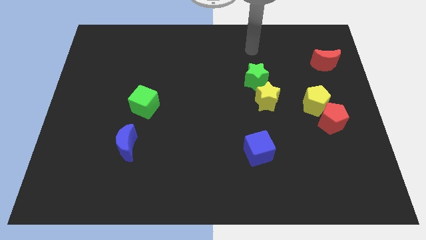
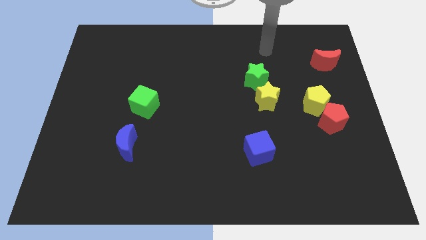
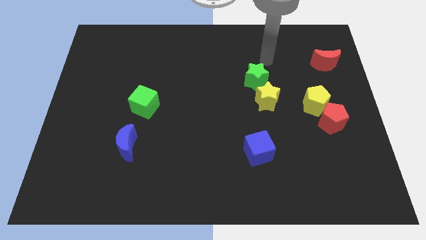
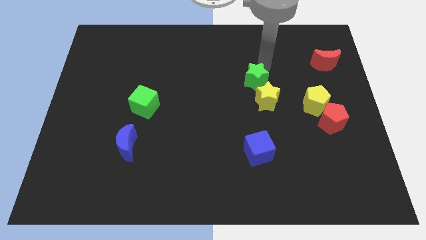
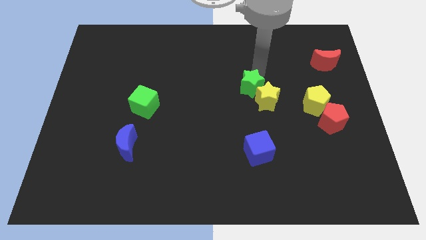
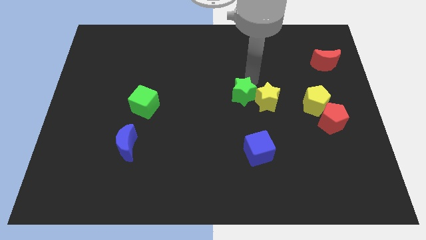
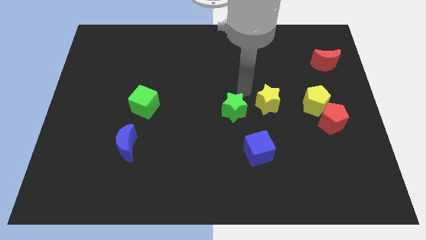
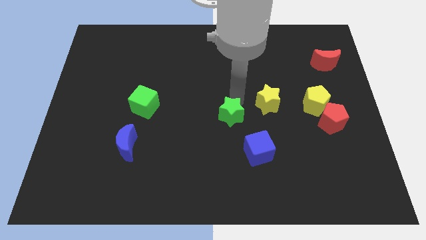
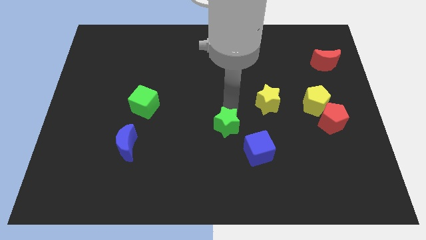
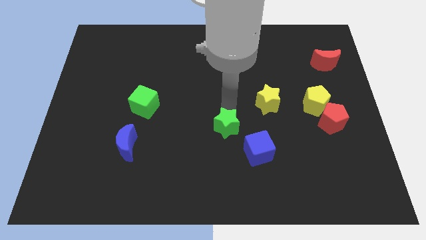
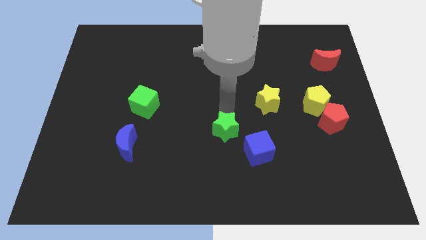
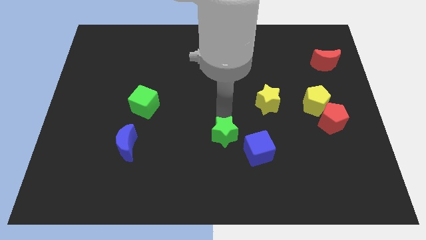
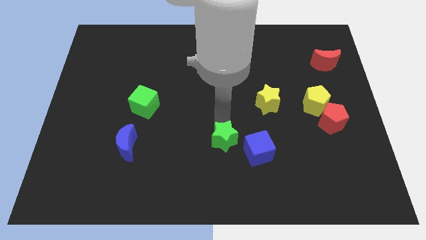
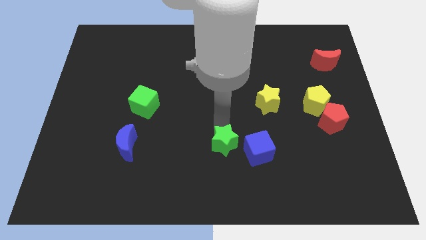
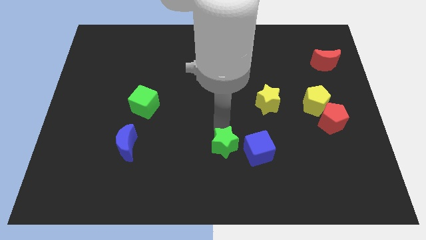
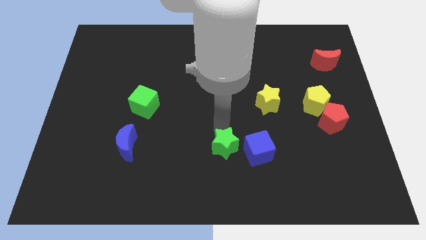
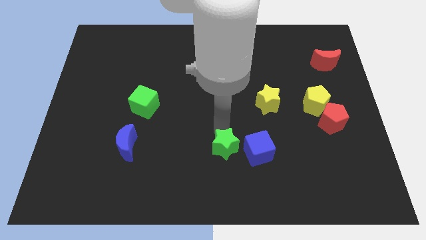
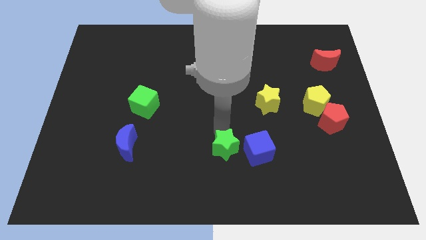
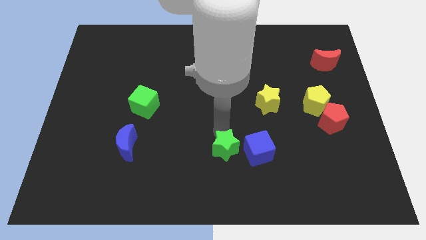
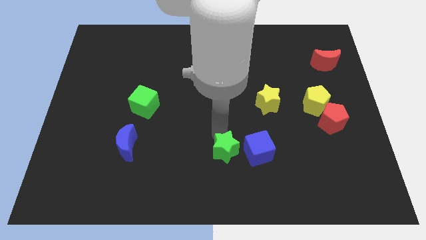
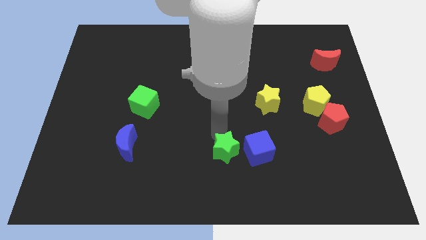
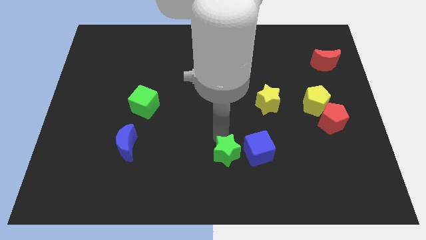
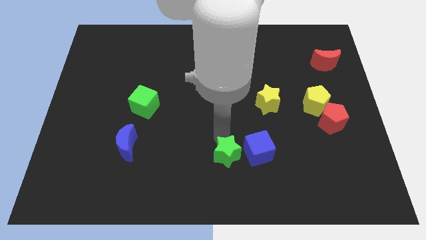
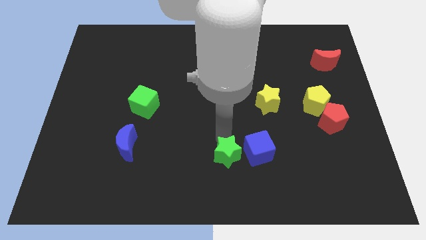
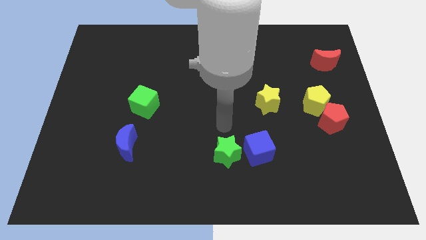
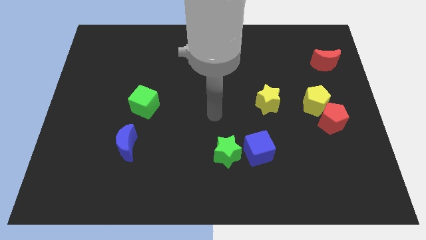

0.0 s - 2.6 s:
move the green star to the left side of the blue cube

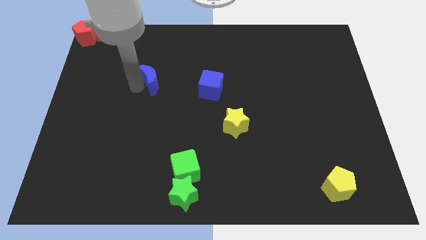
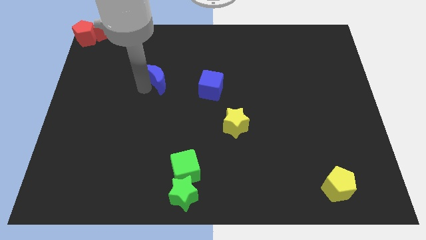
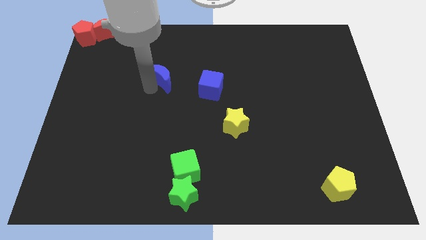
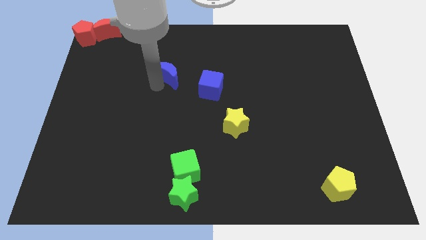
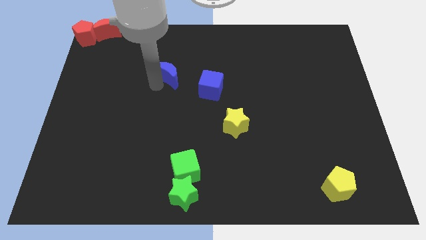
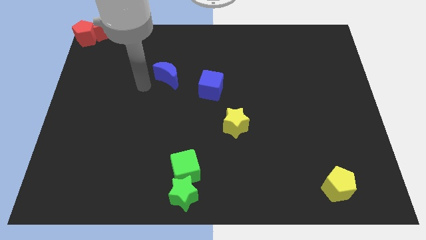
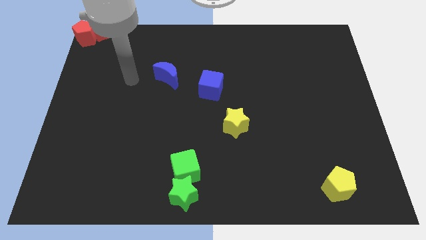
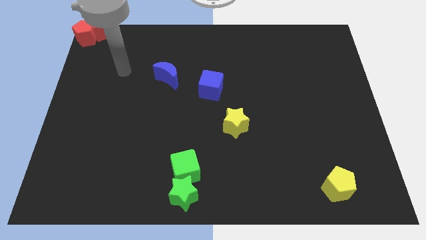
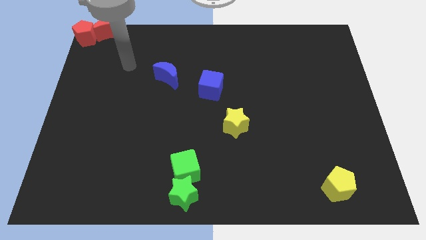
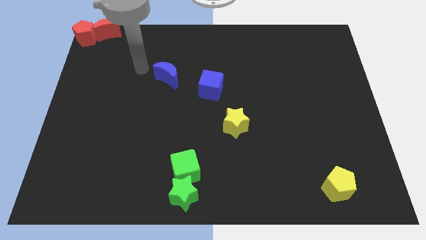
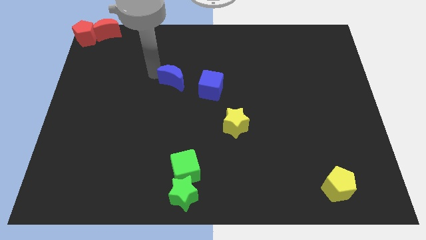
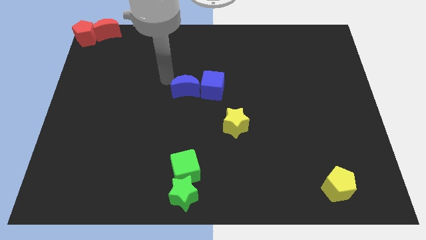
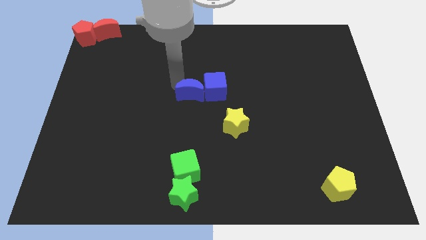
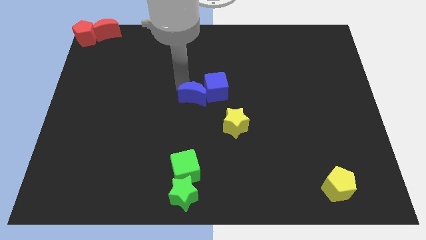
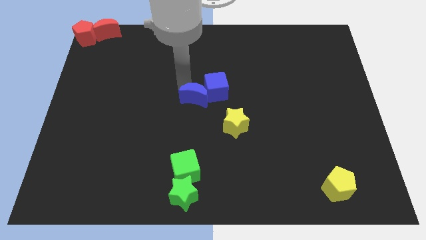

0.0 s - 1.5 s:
push the blue moon into the blue cube

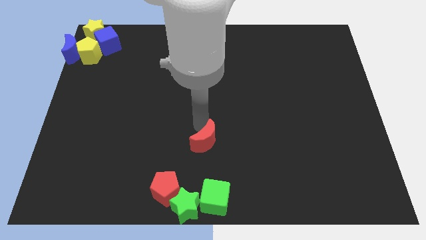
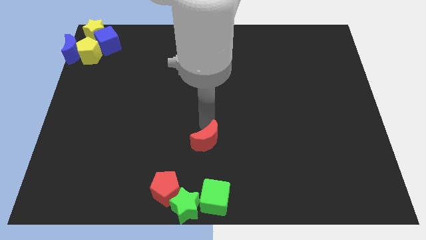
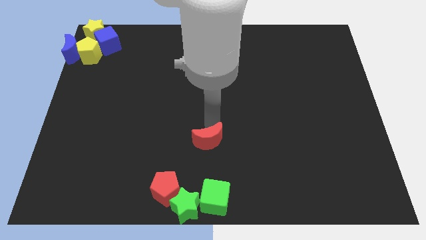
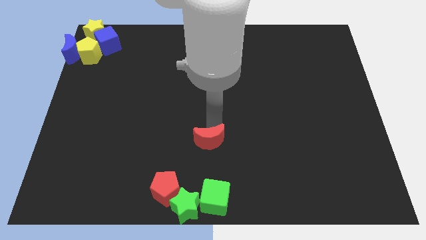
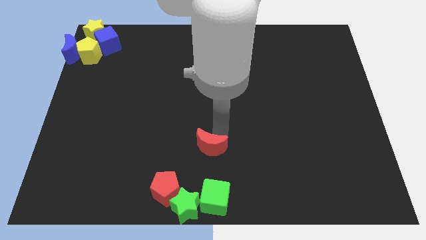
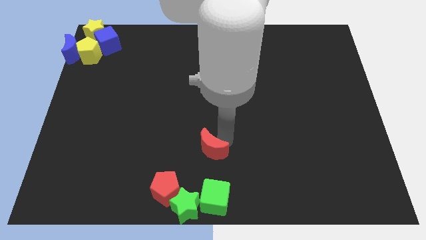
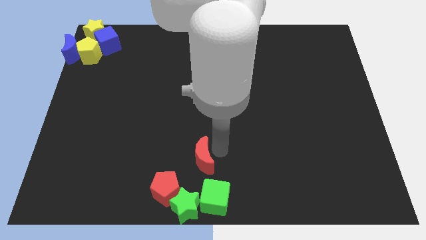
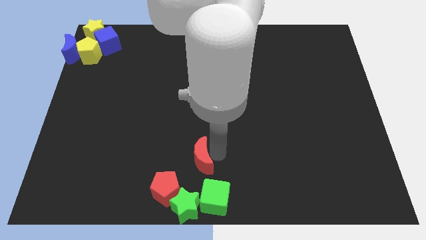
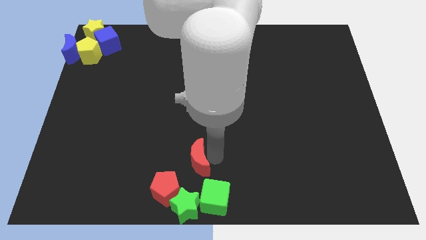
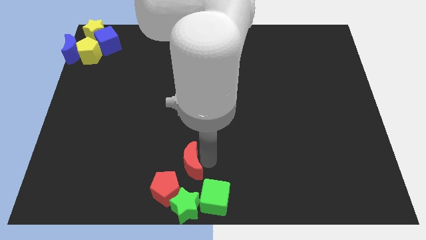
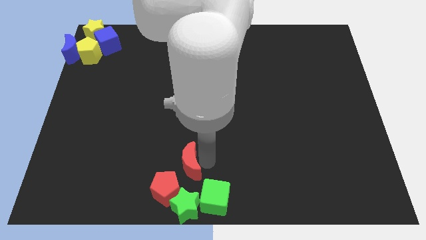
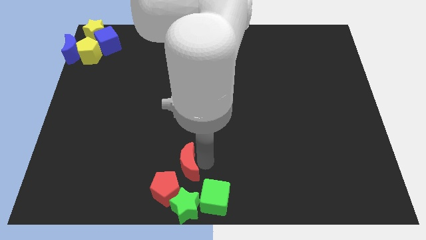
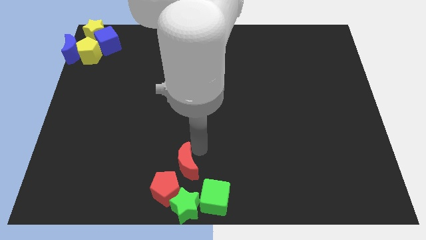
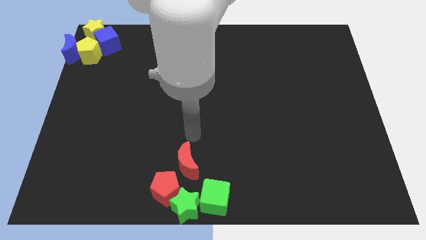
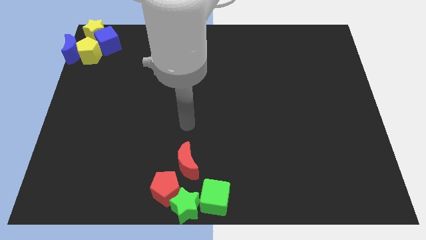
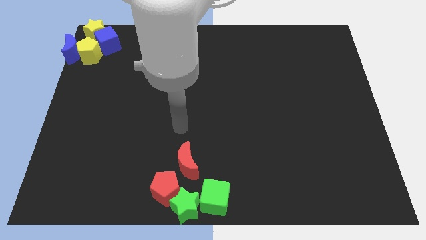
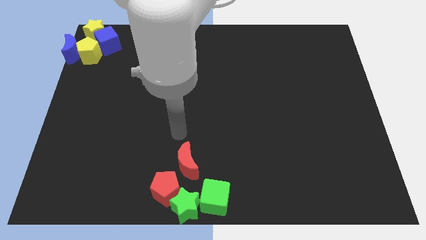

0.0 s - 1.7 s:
place the red crescent vertically above the green star

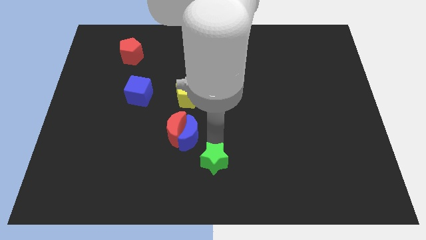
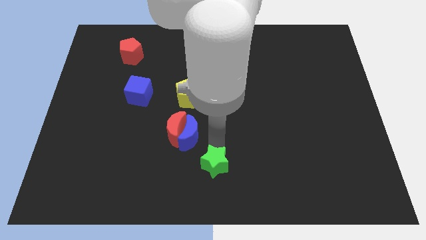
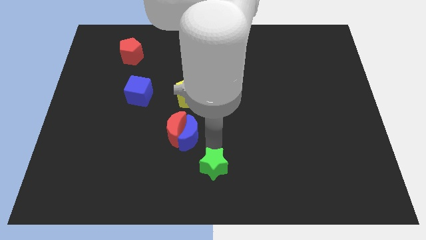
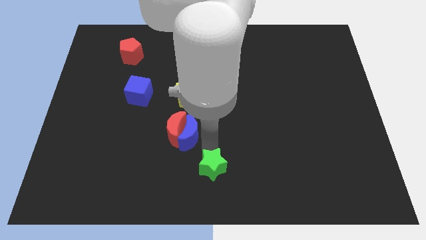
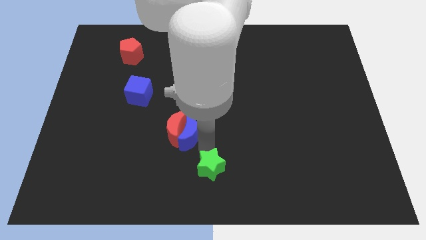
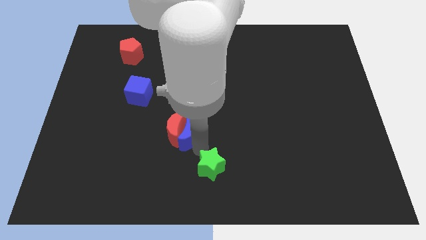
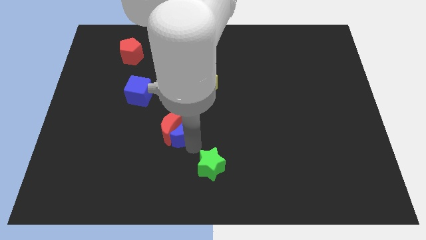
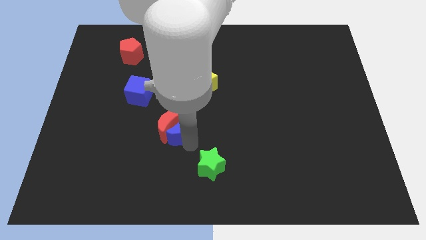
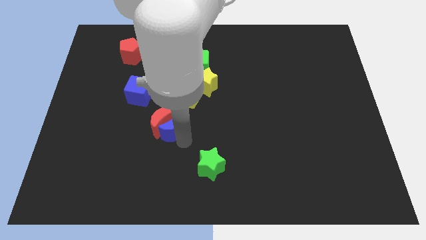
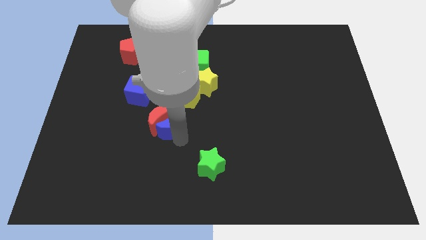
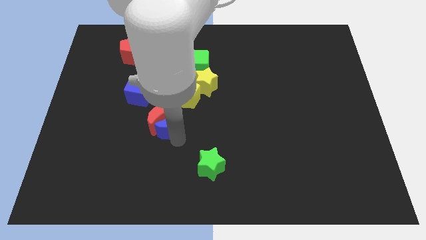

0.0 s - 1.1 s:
push the blue moon into the red moon

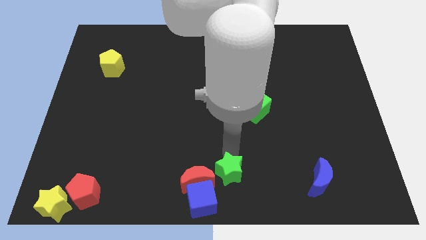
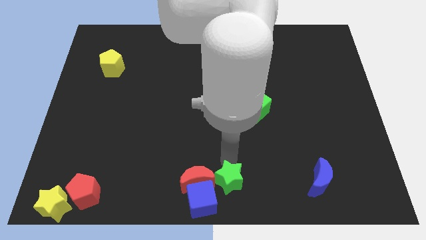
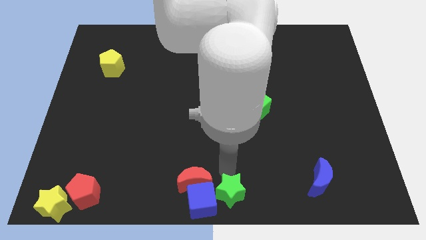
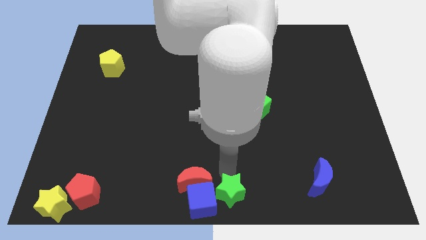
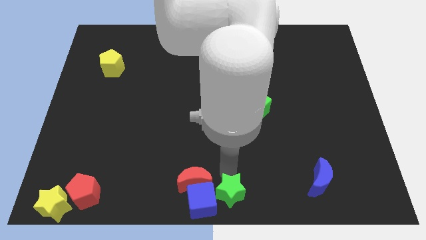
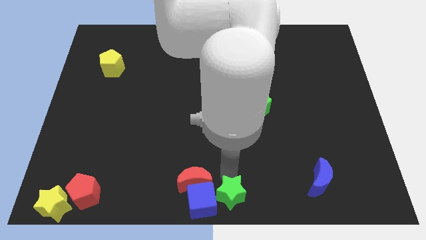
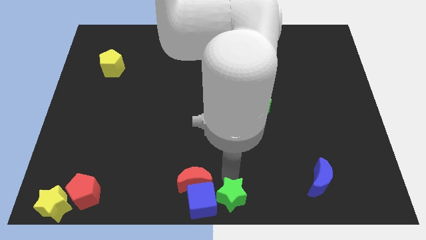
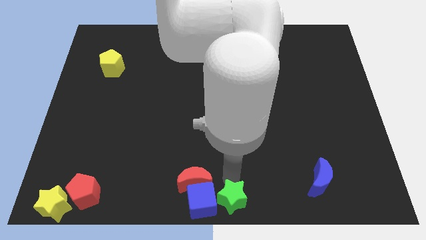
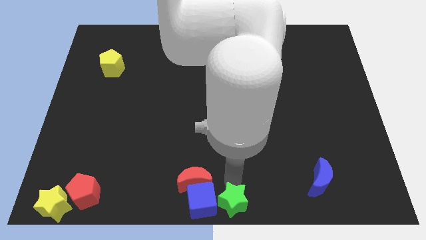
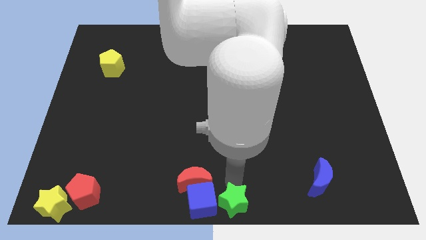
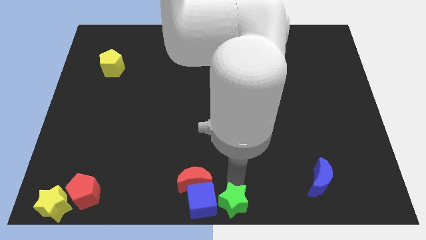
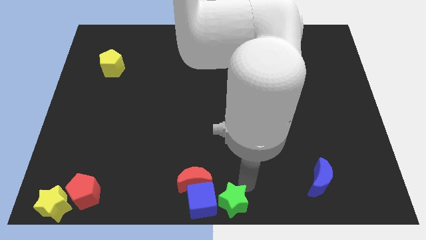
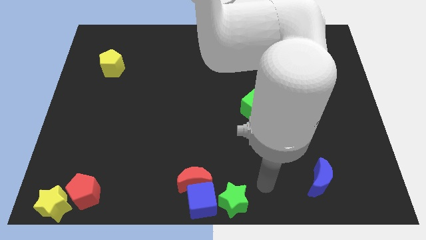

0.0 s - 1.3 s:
move the green star to the bottom center

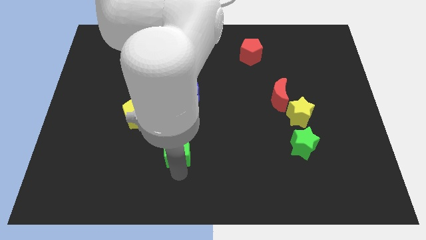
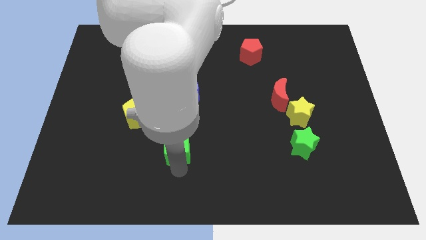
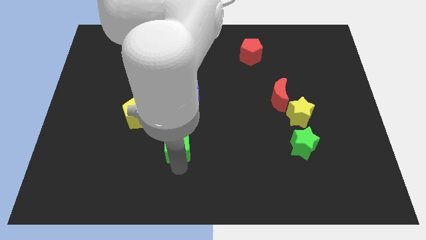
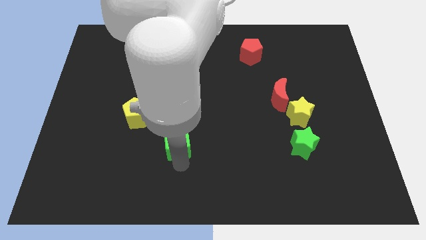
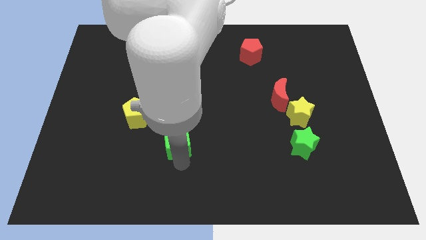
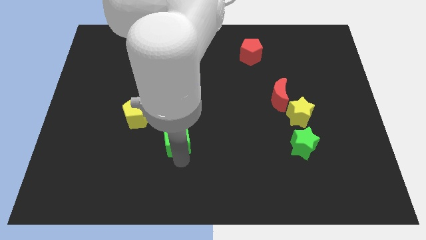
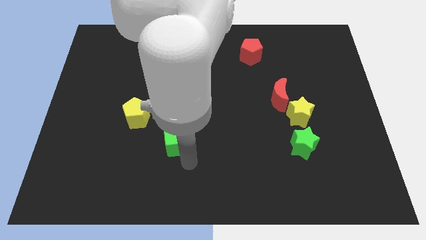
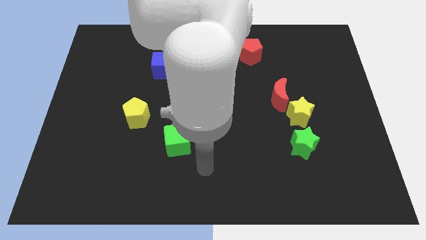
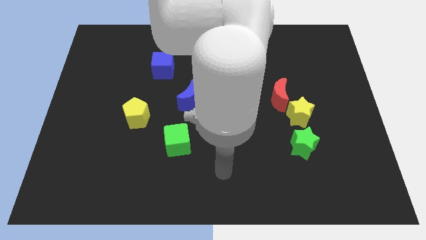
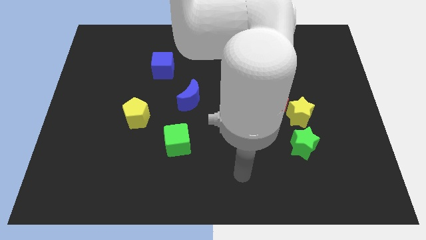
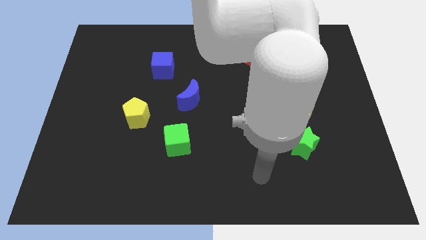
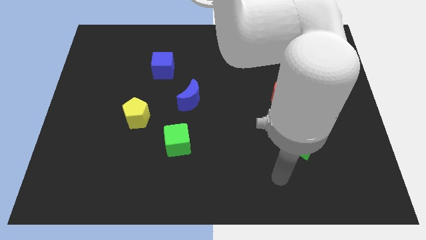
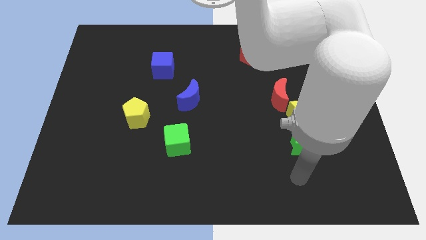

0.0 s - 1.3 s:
move your arm towards the bottom of the green star
